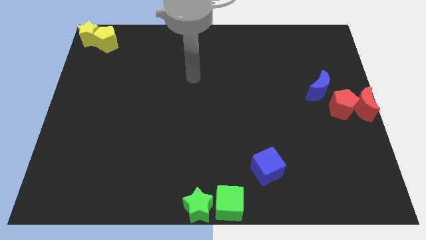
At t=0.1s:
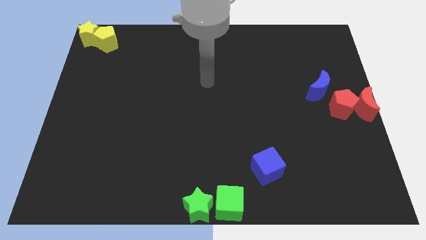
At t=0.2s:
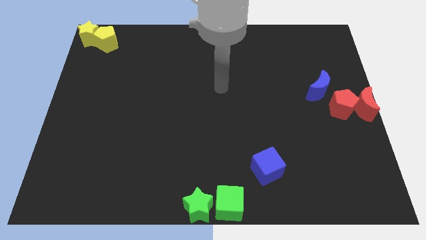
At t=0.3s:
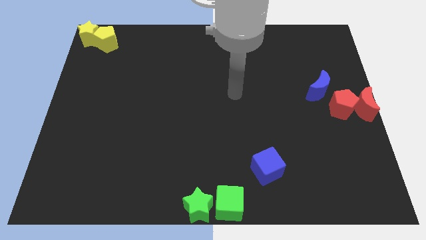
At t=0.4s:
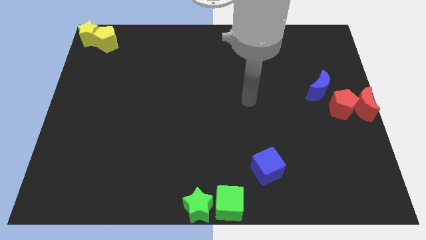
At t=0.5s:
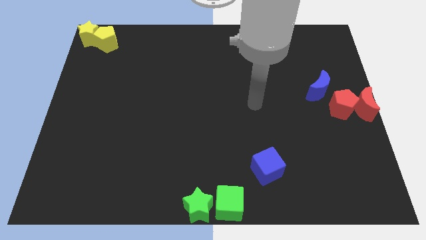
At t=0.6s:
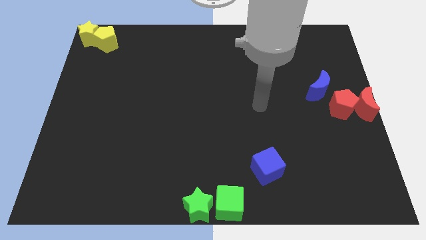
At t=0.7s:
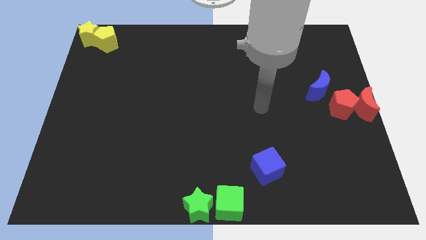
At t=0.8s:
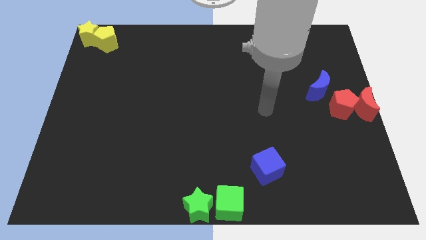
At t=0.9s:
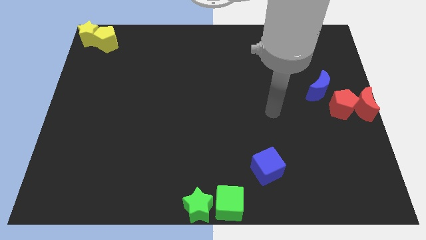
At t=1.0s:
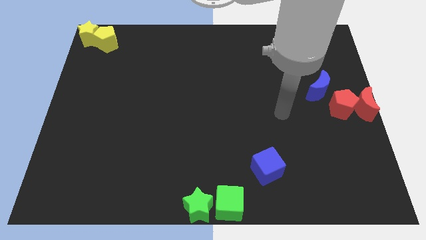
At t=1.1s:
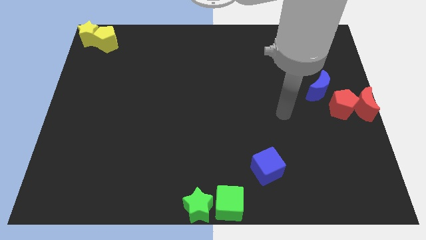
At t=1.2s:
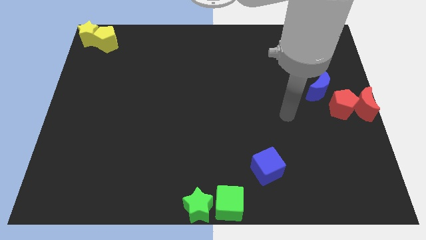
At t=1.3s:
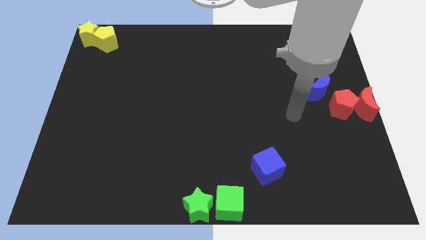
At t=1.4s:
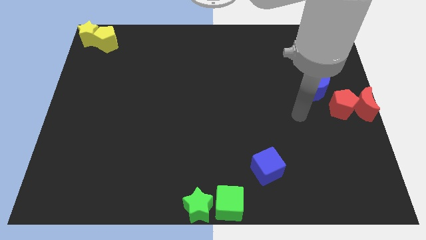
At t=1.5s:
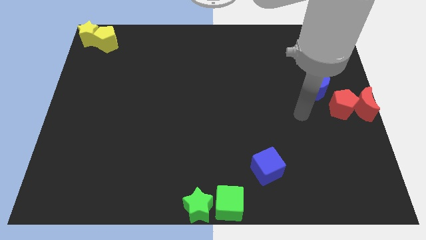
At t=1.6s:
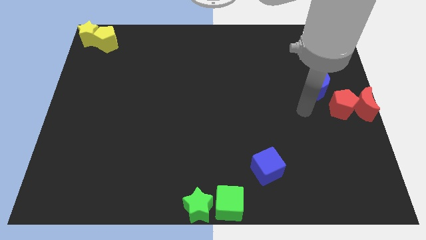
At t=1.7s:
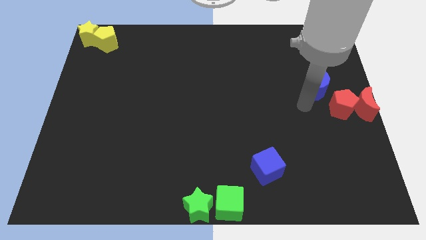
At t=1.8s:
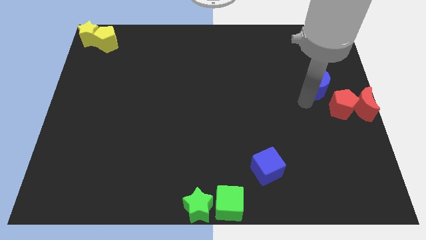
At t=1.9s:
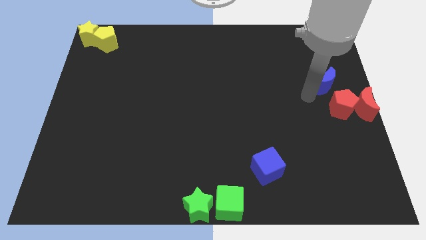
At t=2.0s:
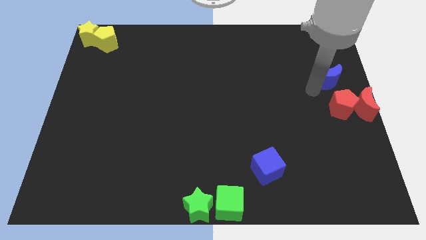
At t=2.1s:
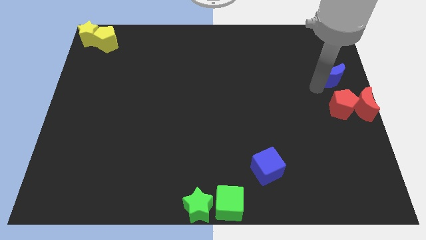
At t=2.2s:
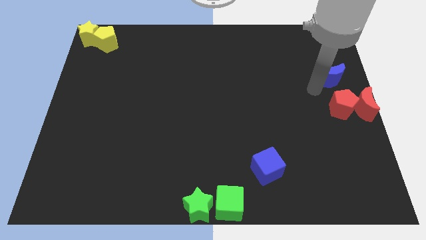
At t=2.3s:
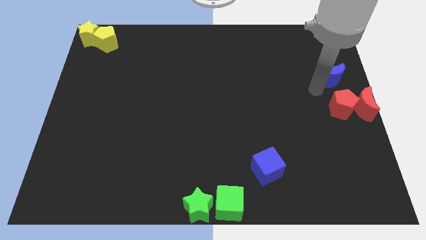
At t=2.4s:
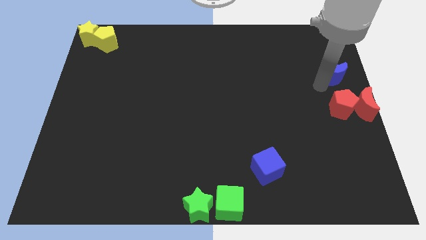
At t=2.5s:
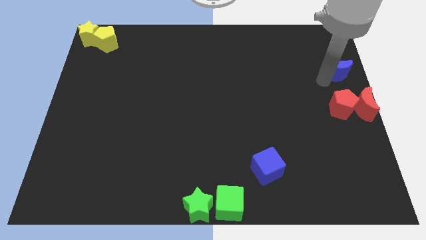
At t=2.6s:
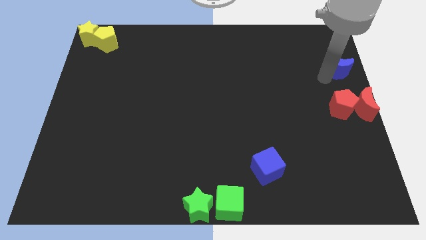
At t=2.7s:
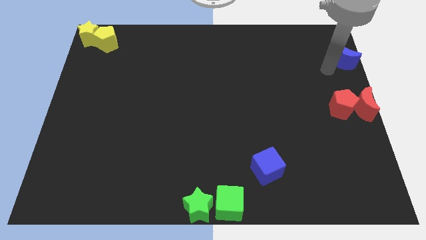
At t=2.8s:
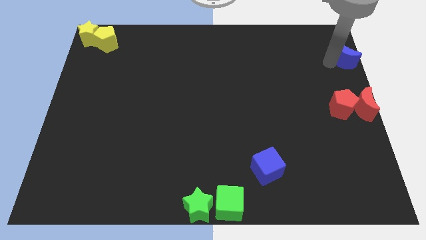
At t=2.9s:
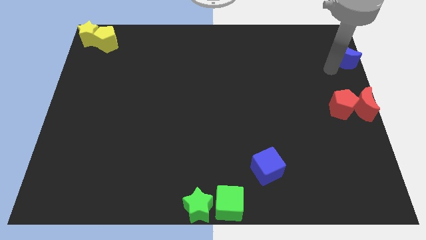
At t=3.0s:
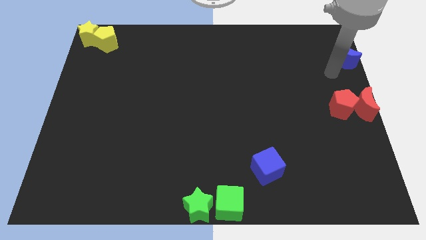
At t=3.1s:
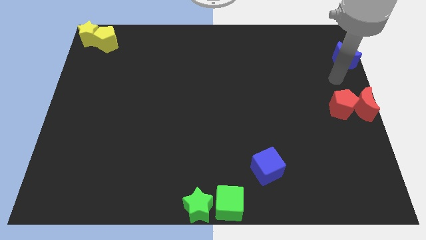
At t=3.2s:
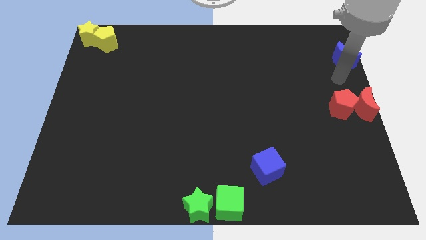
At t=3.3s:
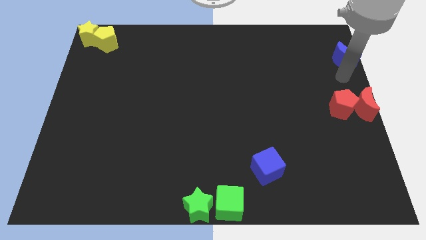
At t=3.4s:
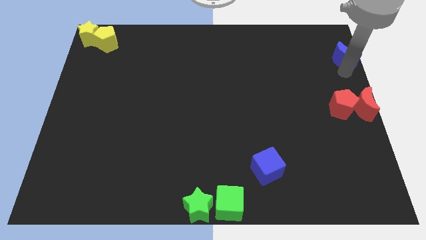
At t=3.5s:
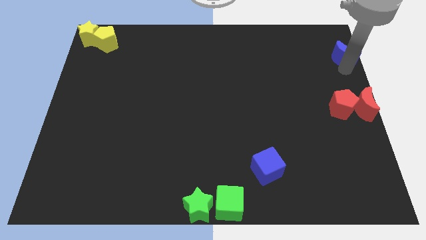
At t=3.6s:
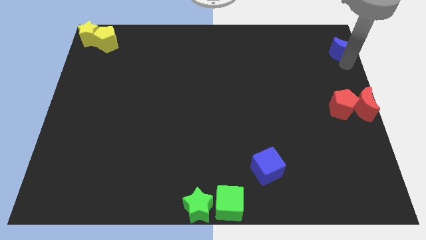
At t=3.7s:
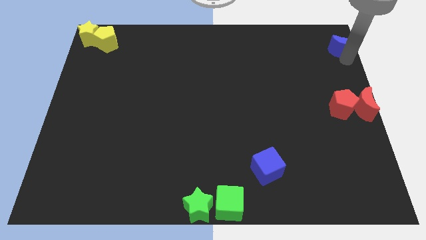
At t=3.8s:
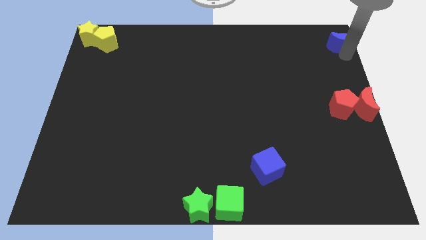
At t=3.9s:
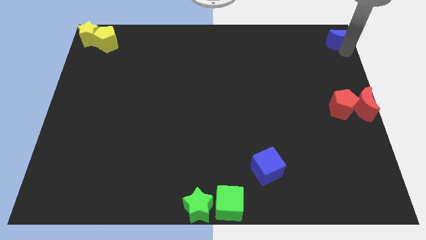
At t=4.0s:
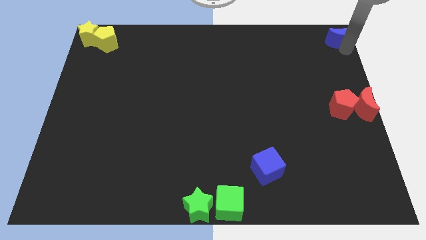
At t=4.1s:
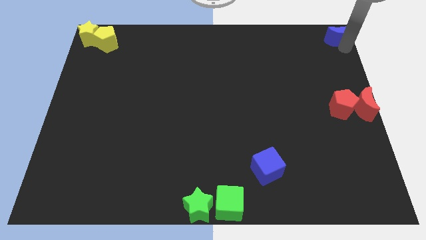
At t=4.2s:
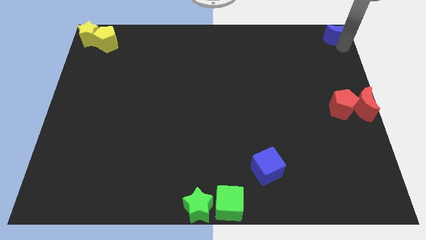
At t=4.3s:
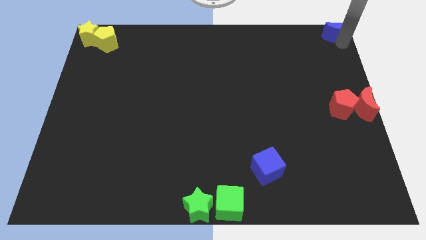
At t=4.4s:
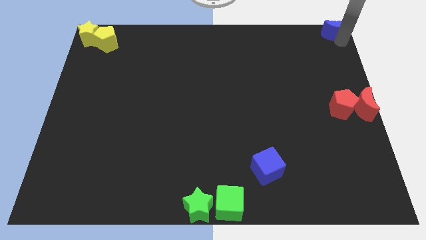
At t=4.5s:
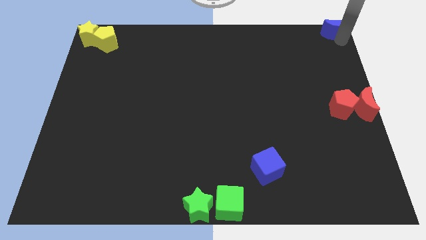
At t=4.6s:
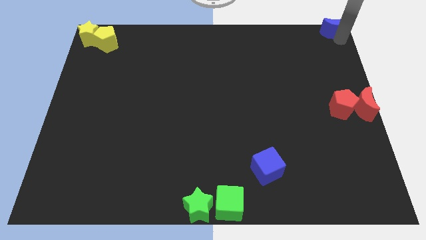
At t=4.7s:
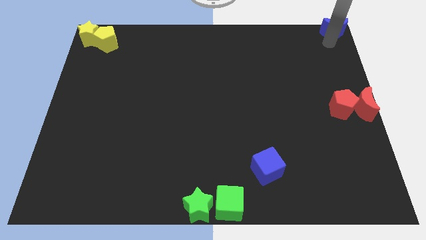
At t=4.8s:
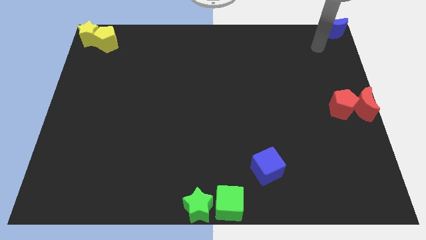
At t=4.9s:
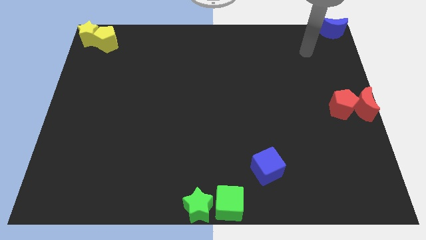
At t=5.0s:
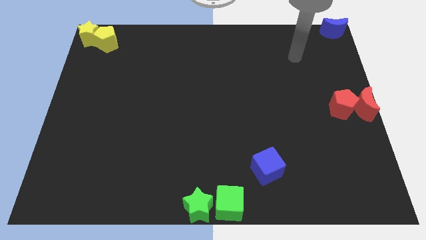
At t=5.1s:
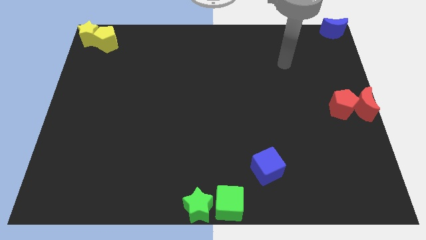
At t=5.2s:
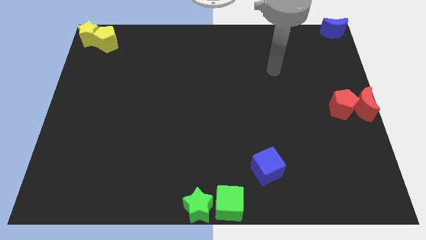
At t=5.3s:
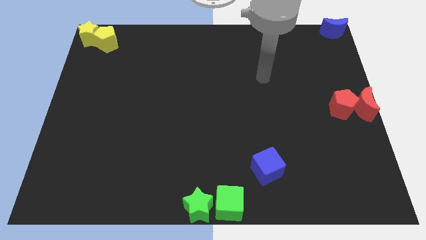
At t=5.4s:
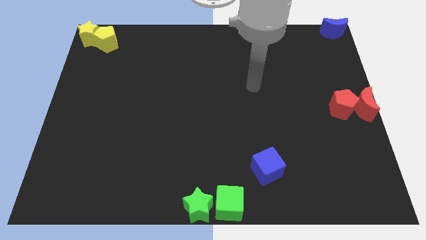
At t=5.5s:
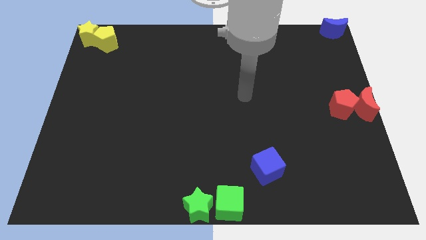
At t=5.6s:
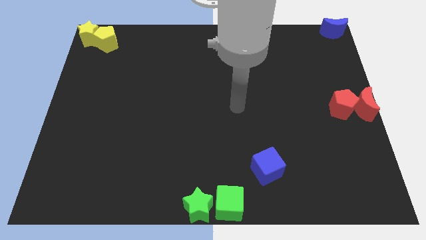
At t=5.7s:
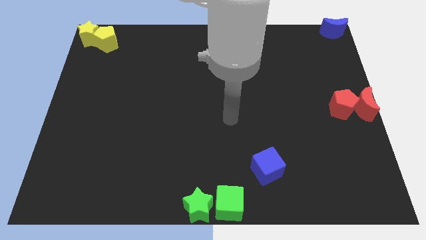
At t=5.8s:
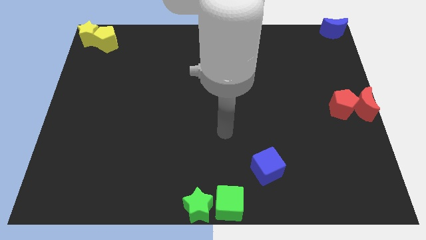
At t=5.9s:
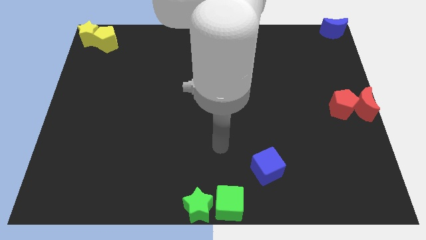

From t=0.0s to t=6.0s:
move blue moon to the top right corner of the board

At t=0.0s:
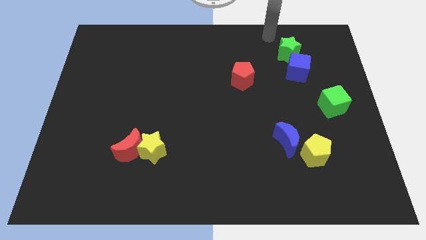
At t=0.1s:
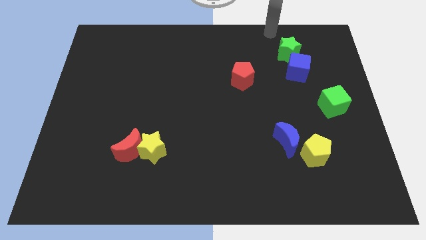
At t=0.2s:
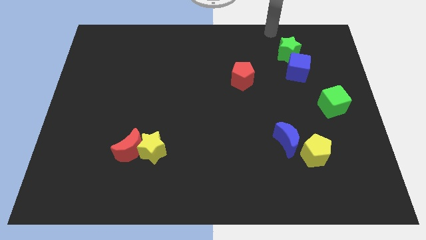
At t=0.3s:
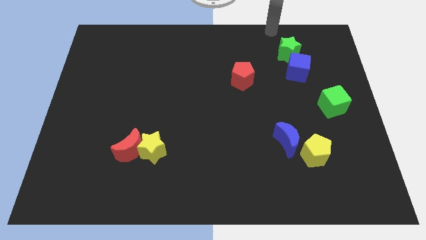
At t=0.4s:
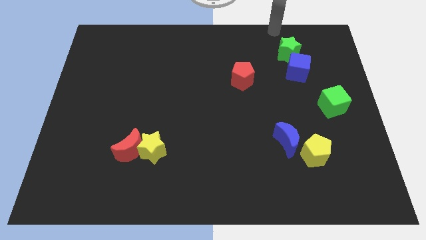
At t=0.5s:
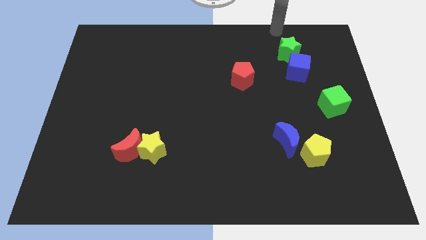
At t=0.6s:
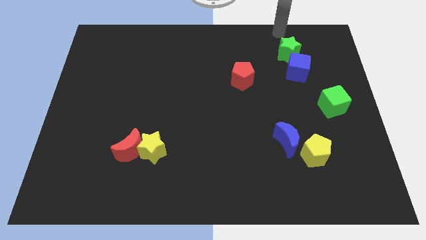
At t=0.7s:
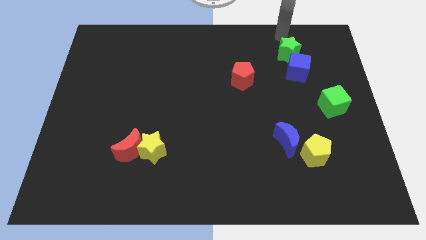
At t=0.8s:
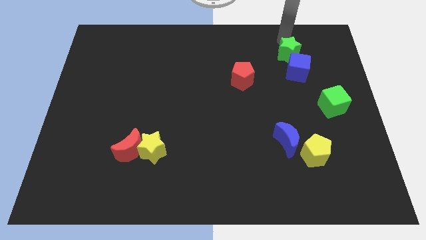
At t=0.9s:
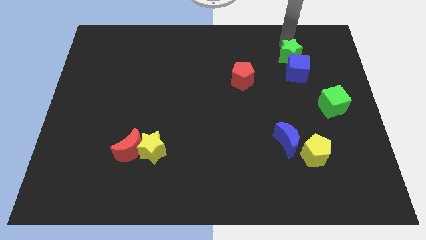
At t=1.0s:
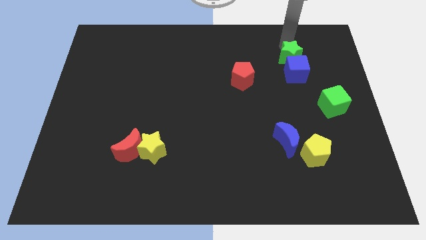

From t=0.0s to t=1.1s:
push green star close to blue cube

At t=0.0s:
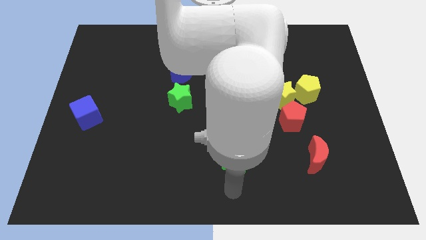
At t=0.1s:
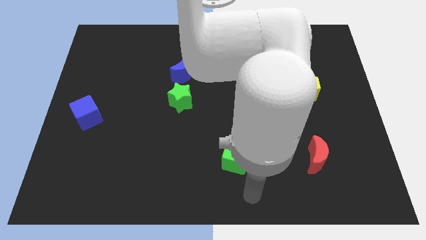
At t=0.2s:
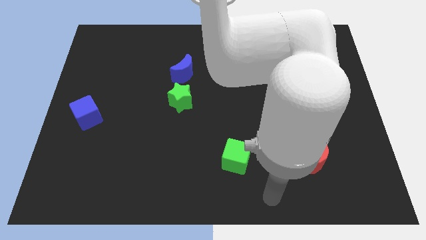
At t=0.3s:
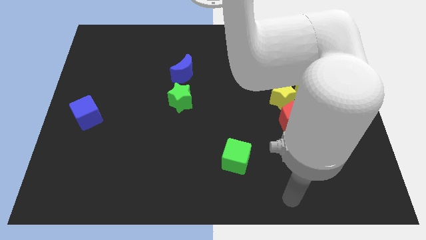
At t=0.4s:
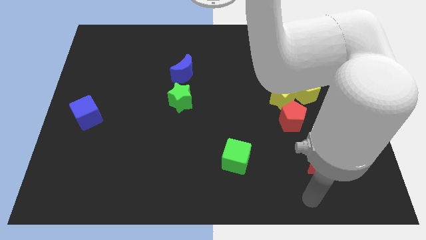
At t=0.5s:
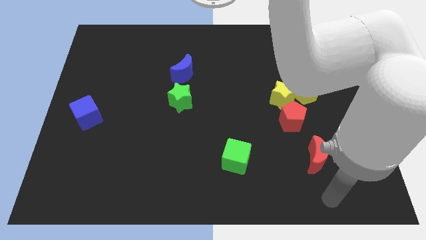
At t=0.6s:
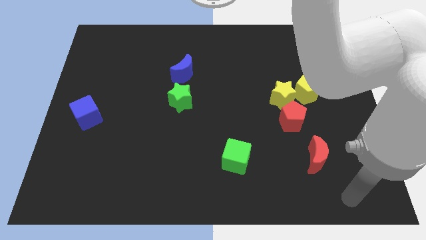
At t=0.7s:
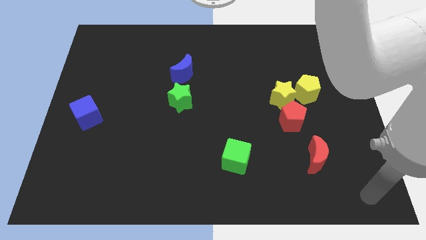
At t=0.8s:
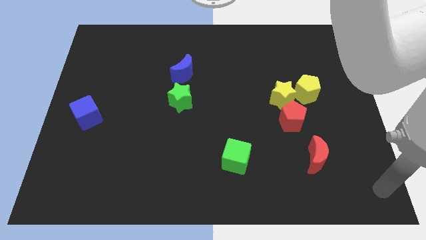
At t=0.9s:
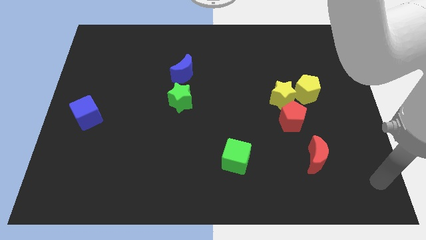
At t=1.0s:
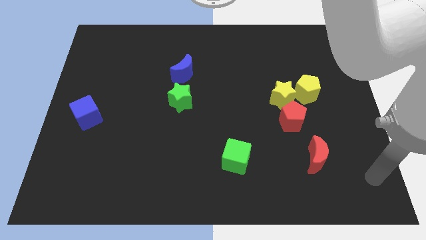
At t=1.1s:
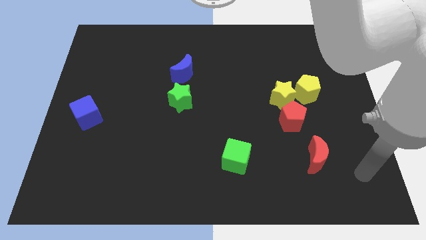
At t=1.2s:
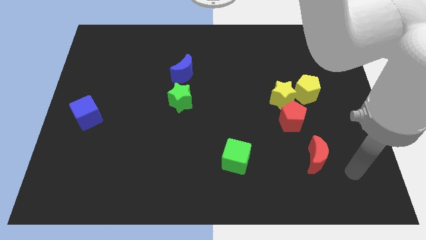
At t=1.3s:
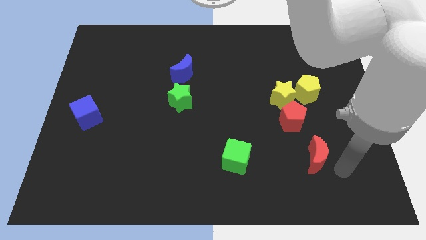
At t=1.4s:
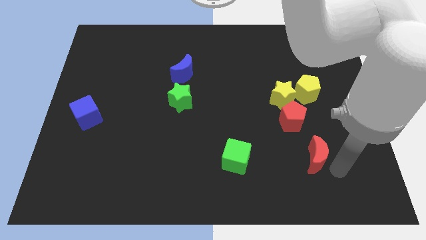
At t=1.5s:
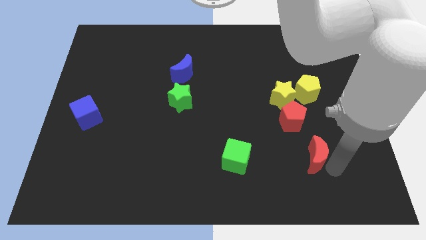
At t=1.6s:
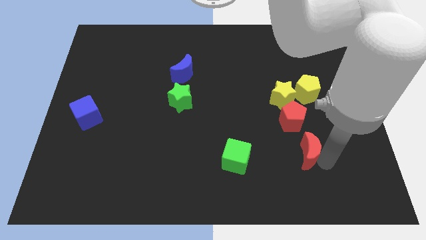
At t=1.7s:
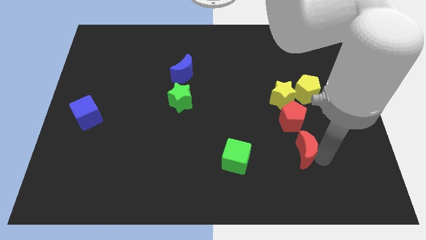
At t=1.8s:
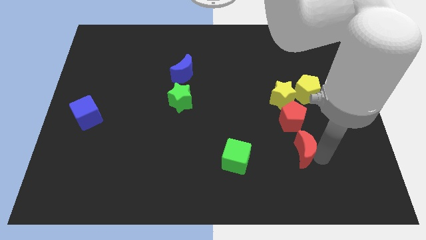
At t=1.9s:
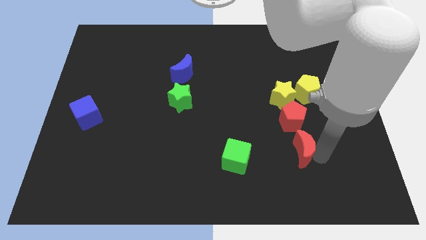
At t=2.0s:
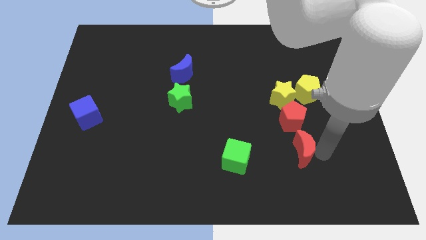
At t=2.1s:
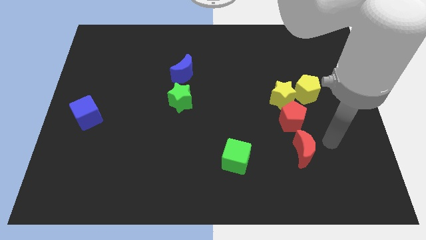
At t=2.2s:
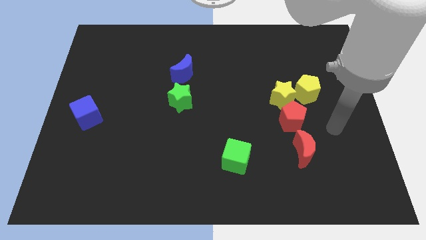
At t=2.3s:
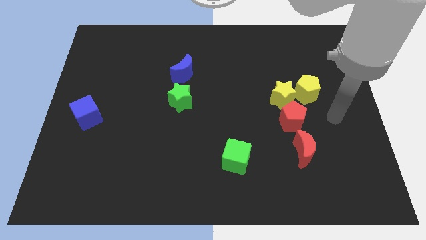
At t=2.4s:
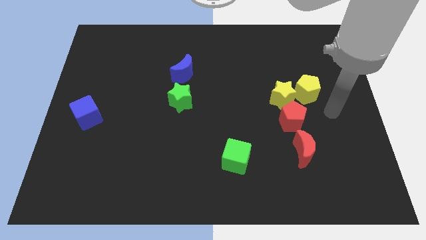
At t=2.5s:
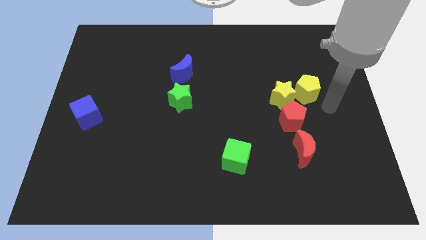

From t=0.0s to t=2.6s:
push the red moon below the red pentagon
